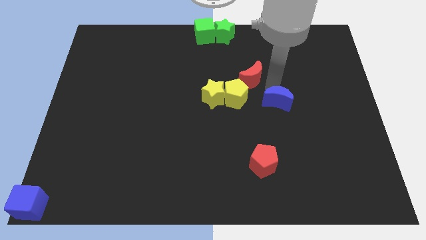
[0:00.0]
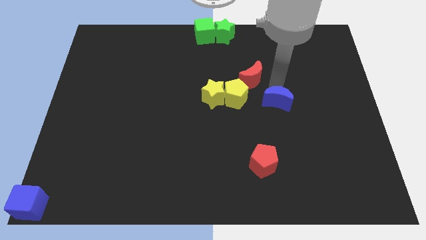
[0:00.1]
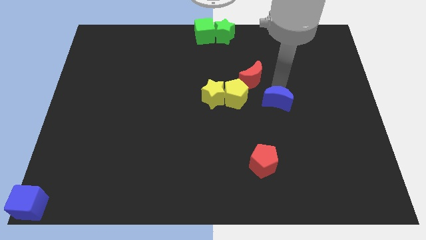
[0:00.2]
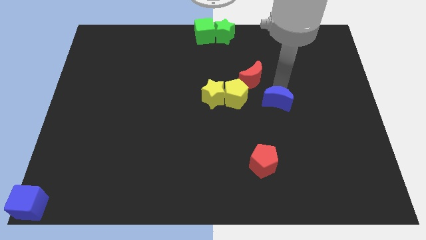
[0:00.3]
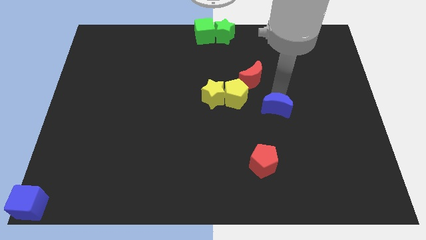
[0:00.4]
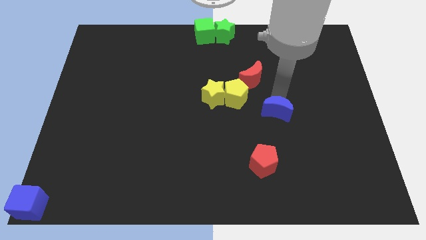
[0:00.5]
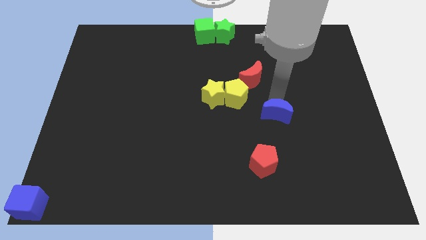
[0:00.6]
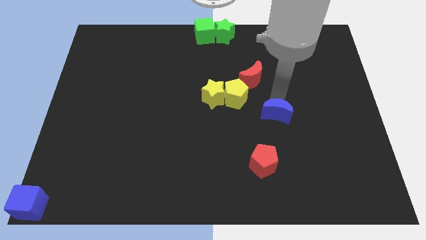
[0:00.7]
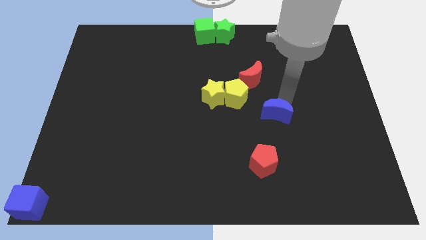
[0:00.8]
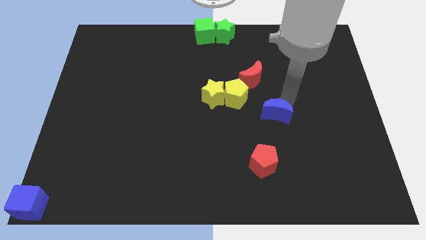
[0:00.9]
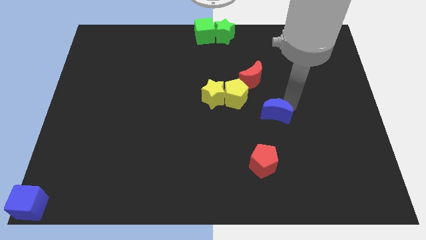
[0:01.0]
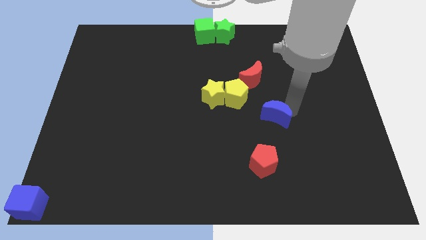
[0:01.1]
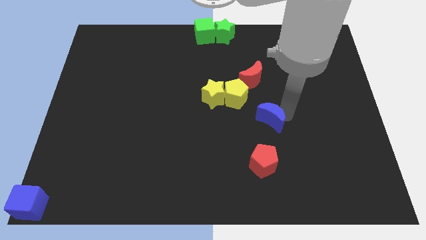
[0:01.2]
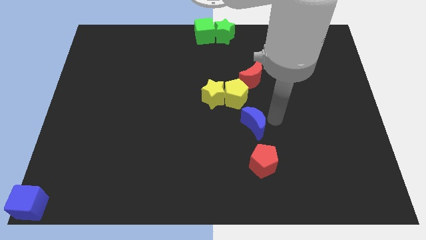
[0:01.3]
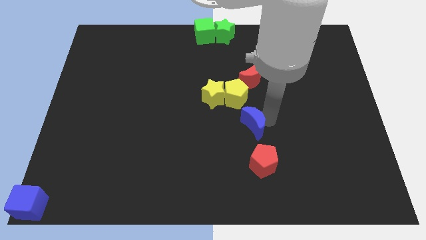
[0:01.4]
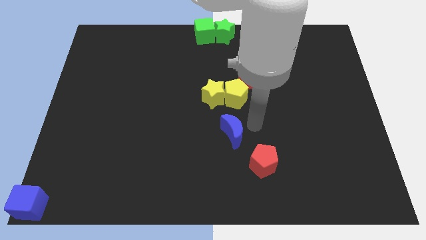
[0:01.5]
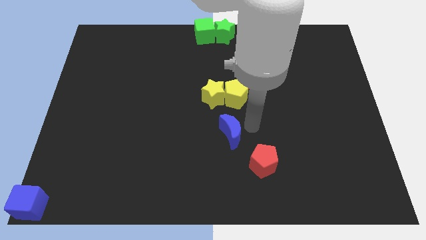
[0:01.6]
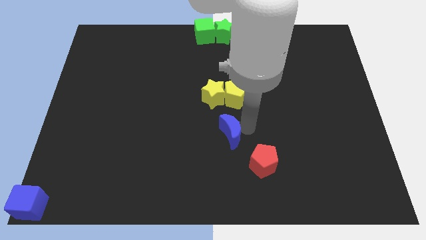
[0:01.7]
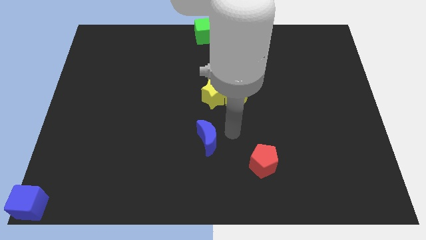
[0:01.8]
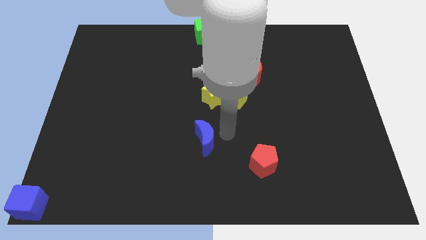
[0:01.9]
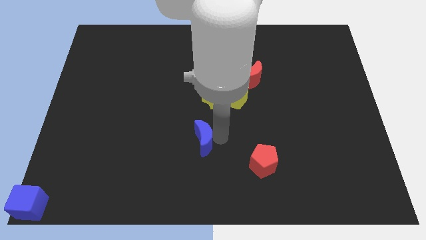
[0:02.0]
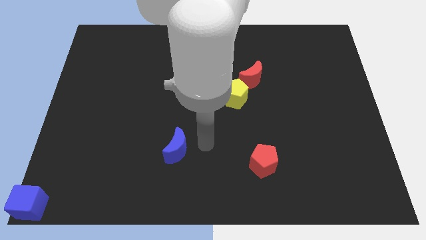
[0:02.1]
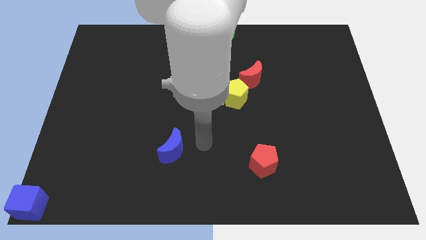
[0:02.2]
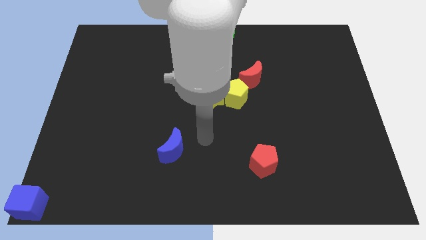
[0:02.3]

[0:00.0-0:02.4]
push blue crescent towards blue block

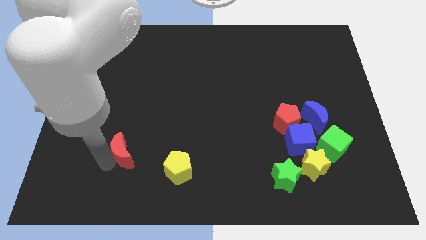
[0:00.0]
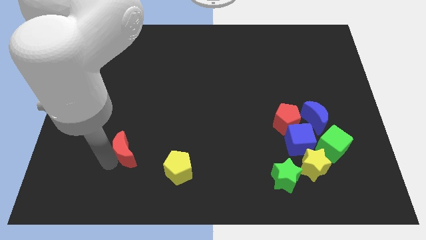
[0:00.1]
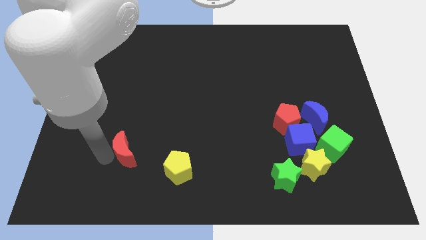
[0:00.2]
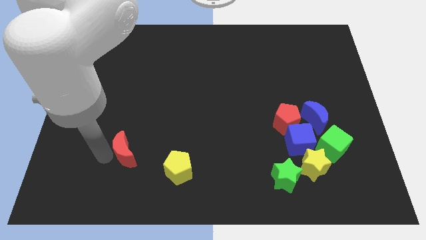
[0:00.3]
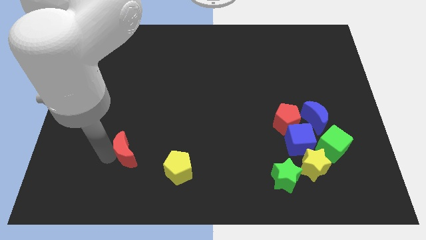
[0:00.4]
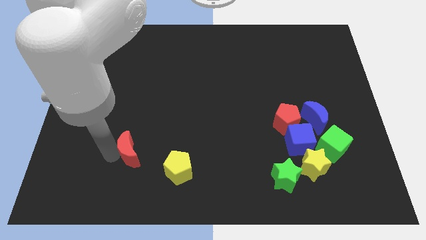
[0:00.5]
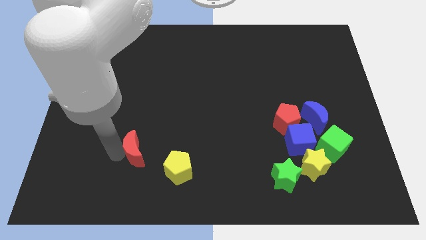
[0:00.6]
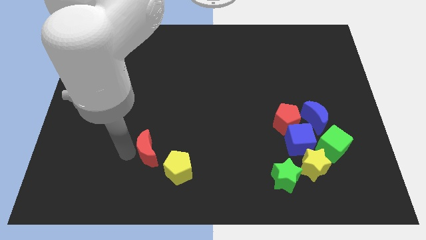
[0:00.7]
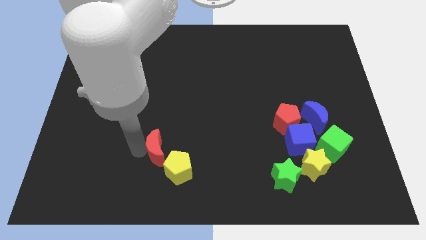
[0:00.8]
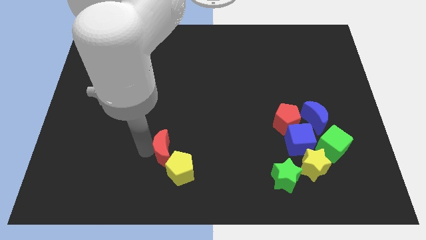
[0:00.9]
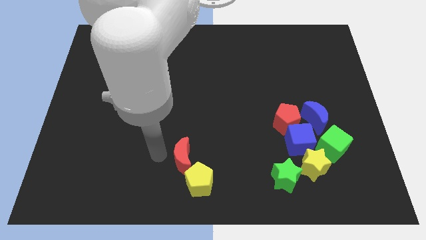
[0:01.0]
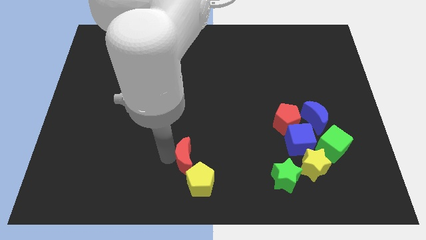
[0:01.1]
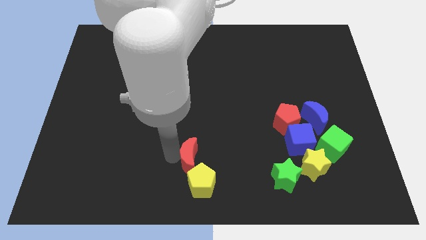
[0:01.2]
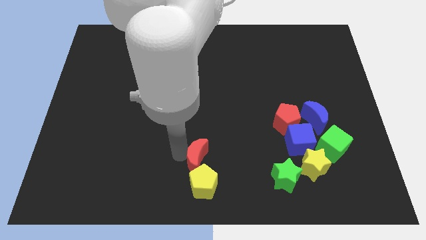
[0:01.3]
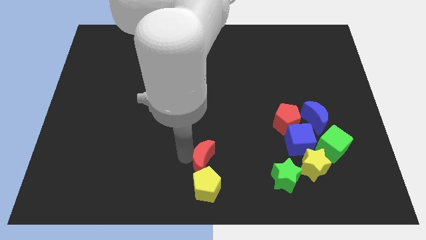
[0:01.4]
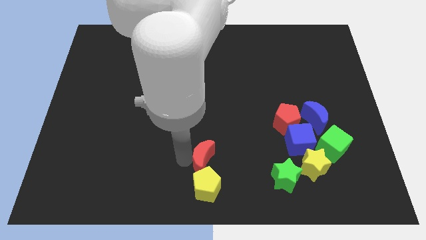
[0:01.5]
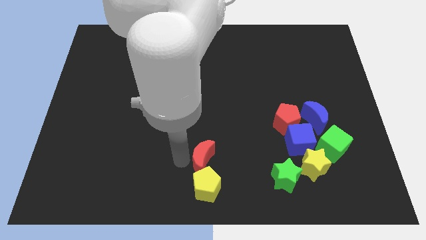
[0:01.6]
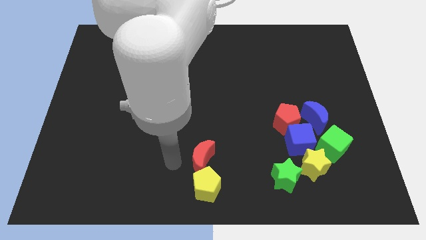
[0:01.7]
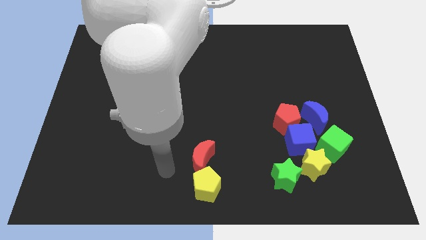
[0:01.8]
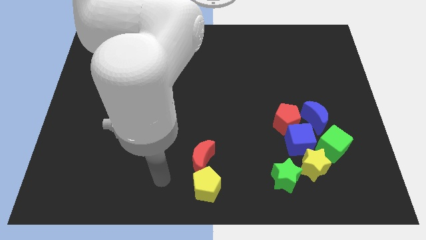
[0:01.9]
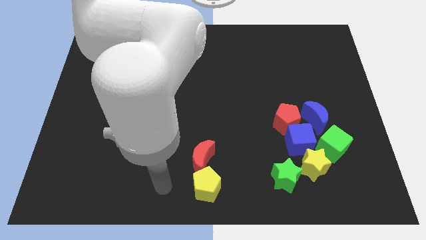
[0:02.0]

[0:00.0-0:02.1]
put the red moon above the yellow pentagon

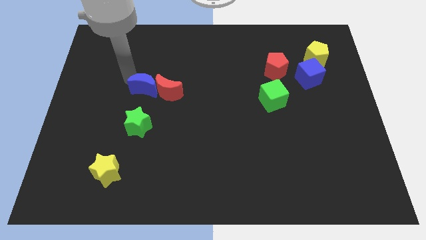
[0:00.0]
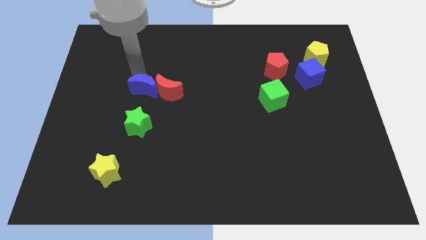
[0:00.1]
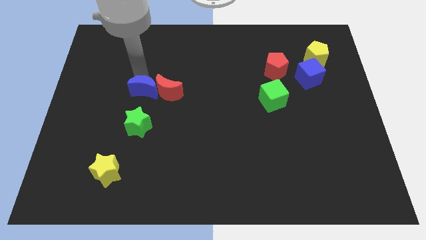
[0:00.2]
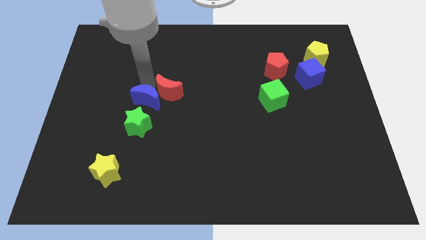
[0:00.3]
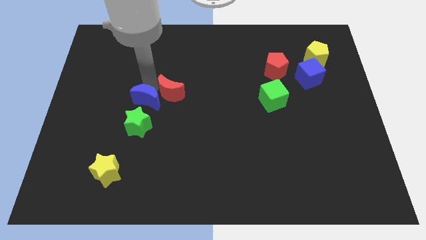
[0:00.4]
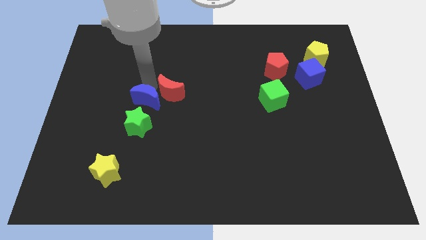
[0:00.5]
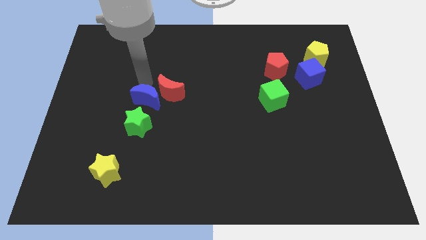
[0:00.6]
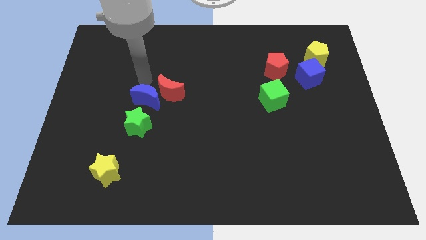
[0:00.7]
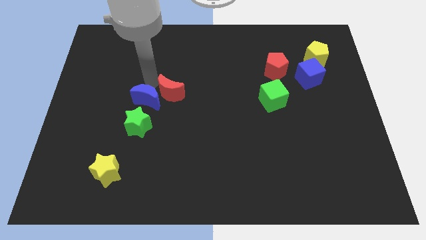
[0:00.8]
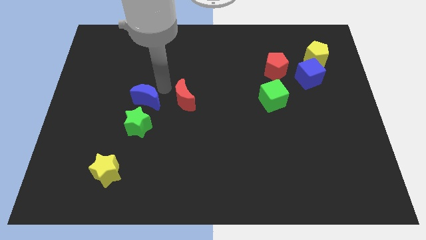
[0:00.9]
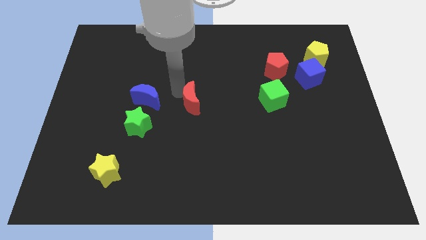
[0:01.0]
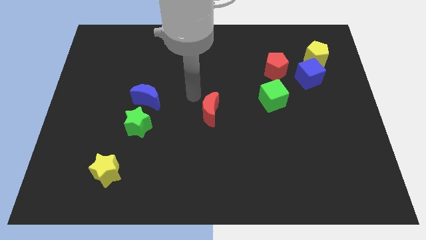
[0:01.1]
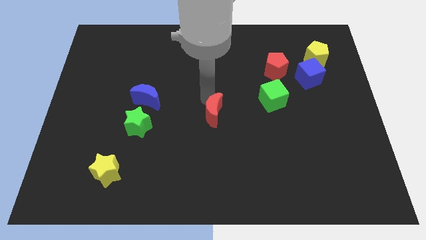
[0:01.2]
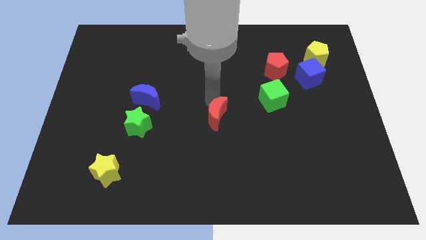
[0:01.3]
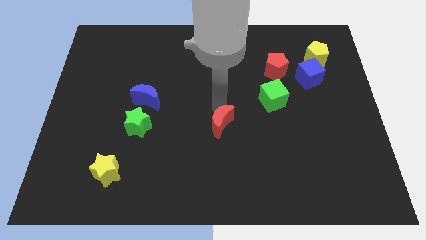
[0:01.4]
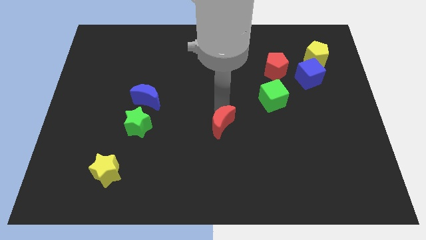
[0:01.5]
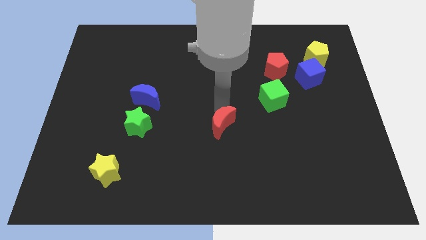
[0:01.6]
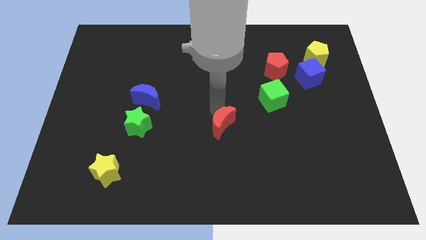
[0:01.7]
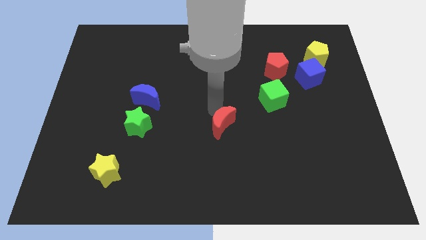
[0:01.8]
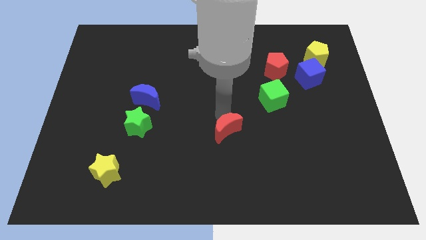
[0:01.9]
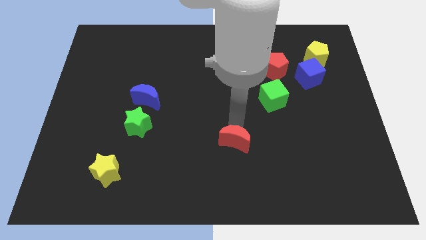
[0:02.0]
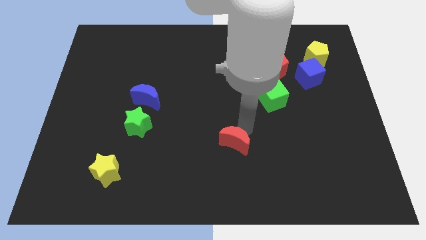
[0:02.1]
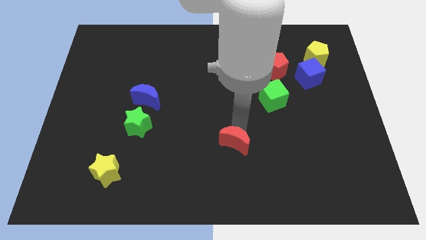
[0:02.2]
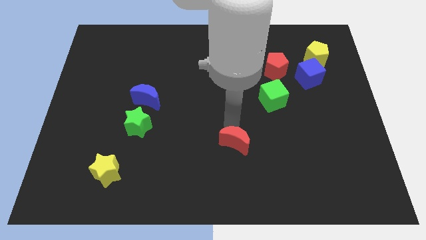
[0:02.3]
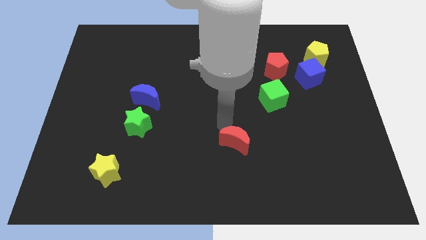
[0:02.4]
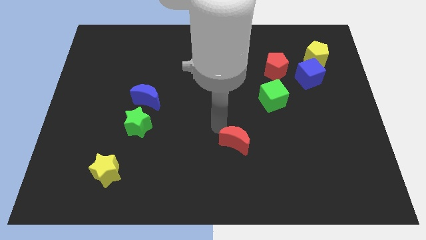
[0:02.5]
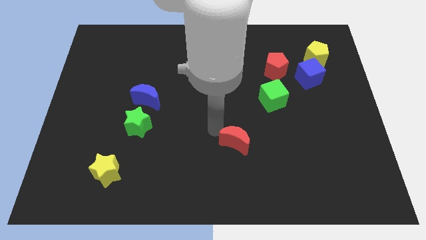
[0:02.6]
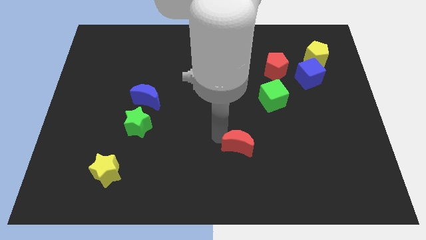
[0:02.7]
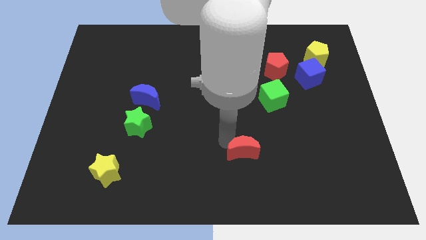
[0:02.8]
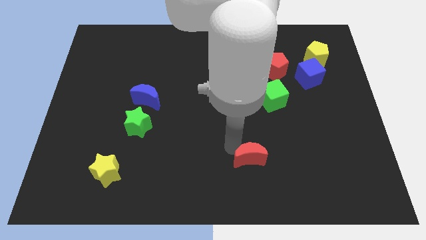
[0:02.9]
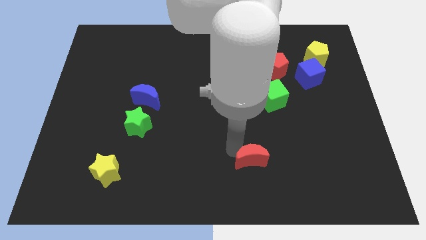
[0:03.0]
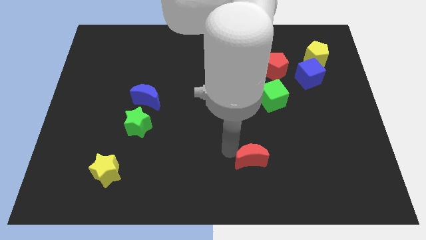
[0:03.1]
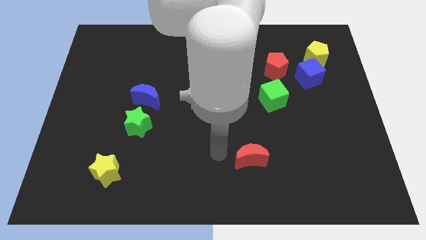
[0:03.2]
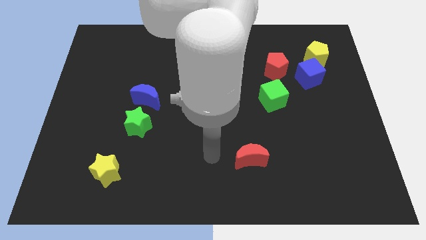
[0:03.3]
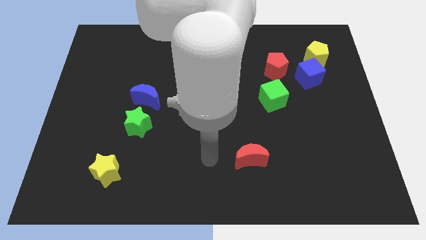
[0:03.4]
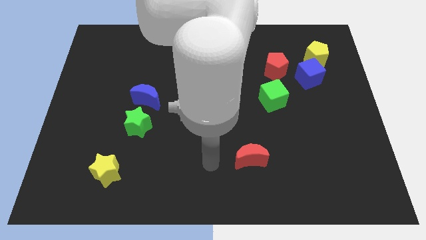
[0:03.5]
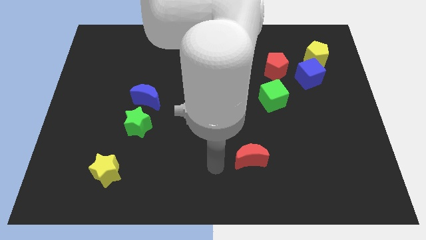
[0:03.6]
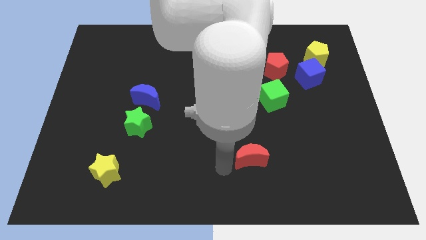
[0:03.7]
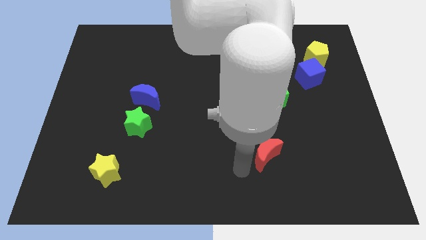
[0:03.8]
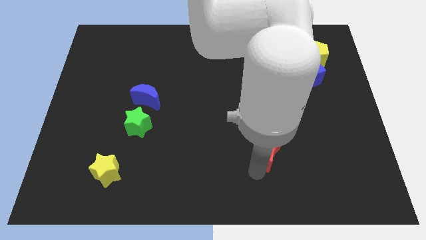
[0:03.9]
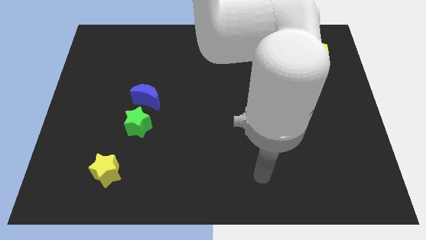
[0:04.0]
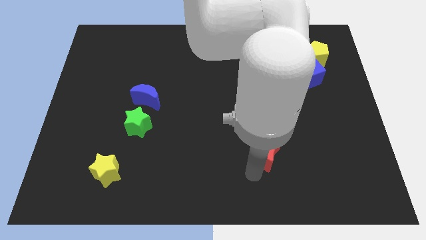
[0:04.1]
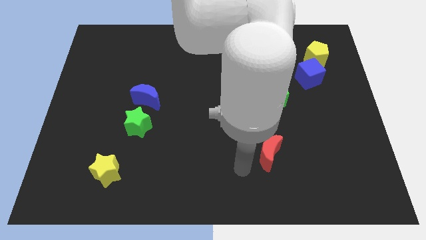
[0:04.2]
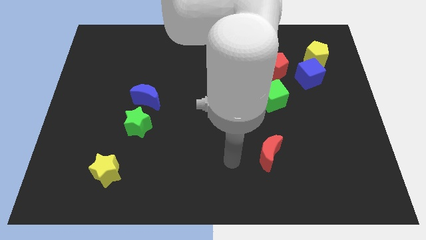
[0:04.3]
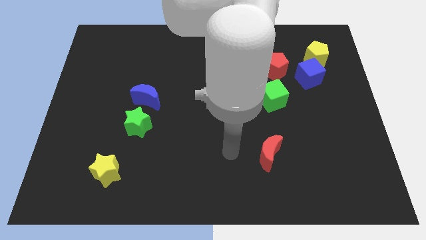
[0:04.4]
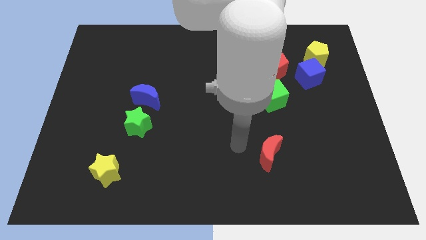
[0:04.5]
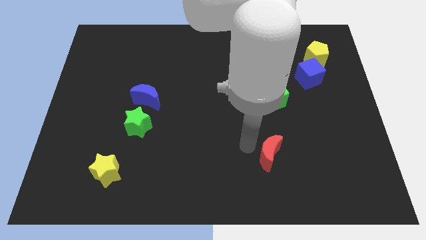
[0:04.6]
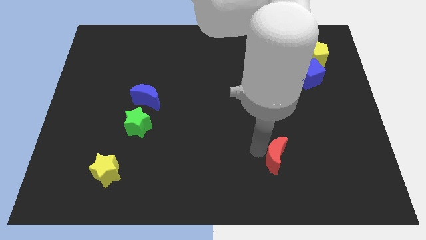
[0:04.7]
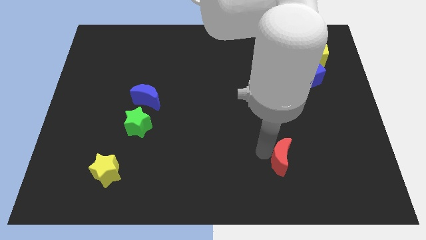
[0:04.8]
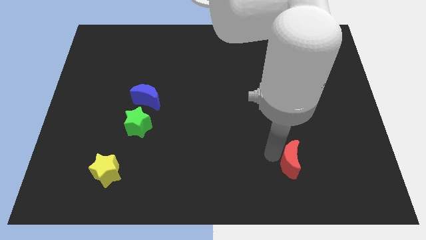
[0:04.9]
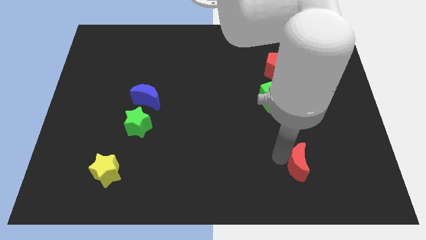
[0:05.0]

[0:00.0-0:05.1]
place the red moon below the green cube
